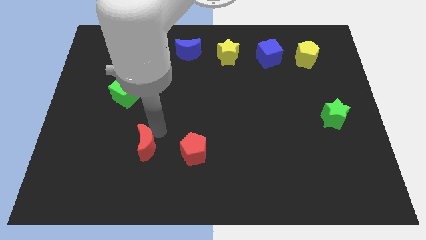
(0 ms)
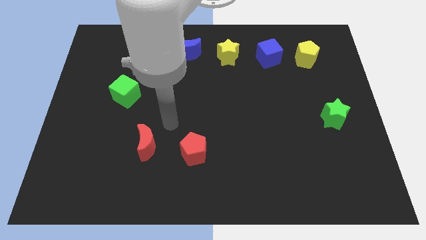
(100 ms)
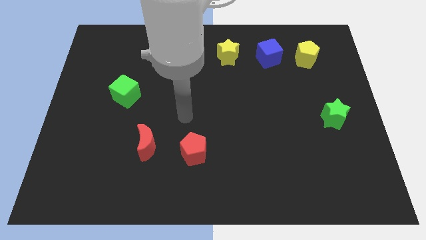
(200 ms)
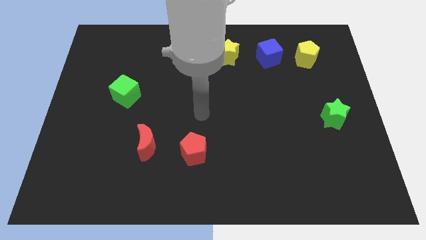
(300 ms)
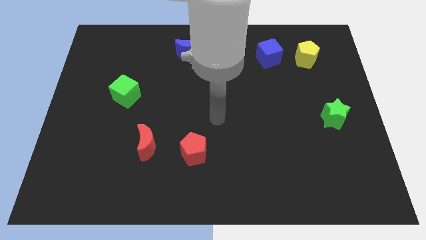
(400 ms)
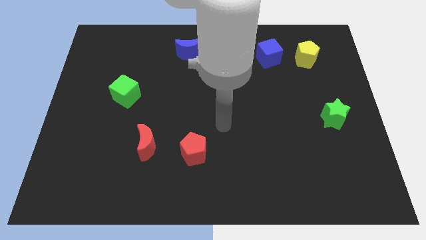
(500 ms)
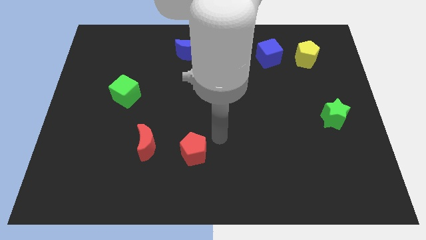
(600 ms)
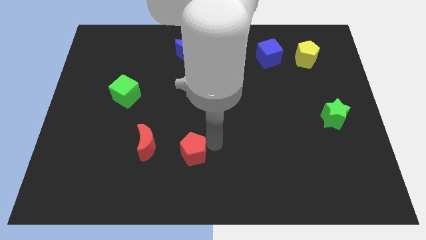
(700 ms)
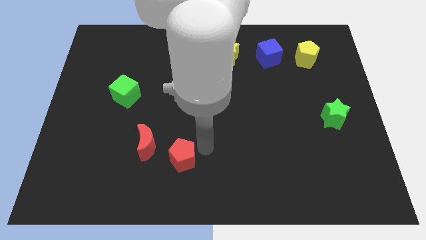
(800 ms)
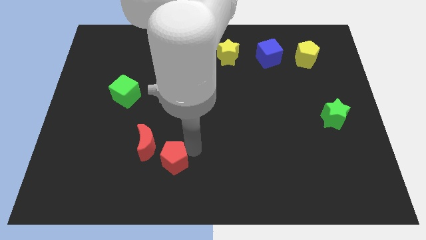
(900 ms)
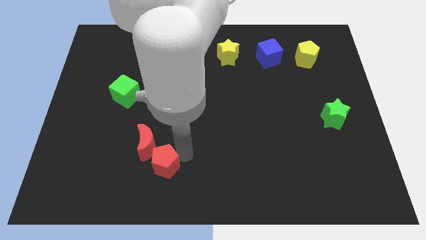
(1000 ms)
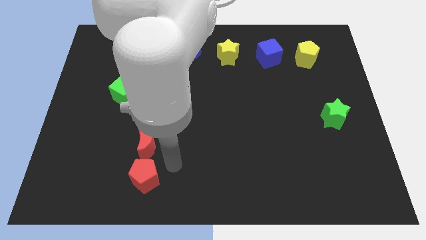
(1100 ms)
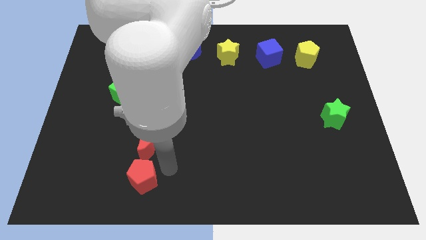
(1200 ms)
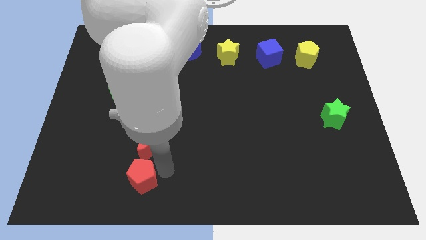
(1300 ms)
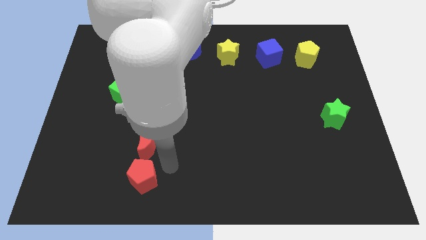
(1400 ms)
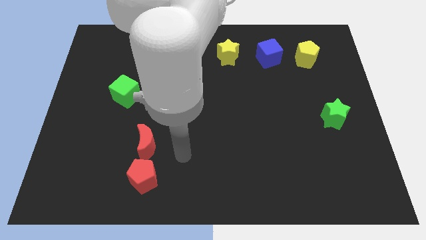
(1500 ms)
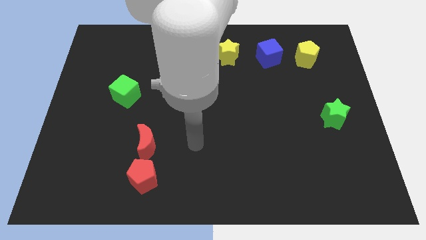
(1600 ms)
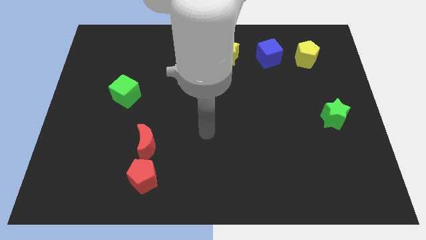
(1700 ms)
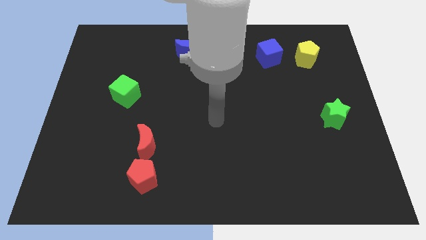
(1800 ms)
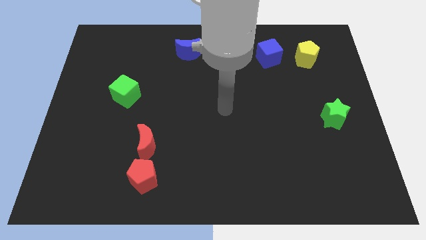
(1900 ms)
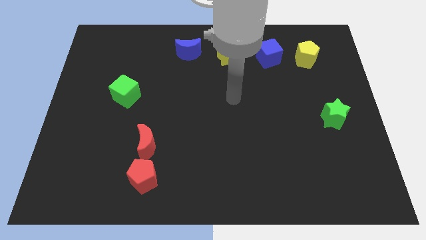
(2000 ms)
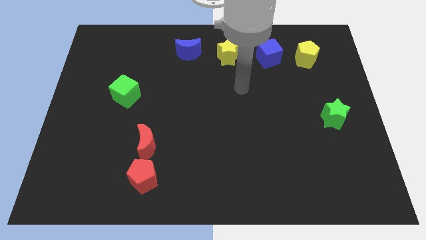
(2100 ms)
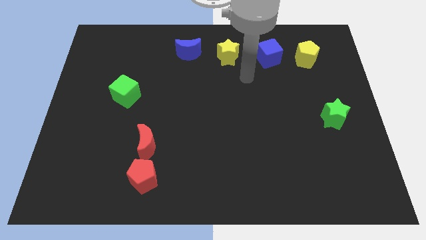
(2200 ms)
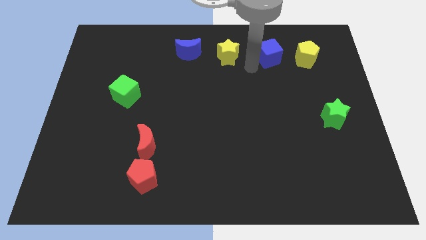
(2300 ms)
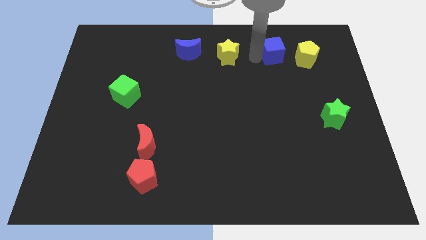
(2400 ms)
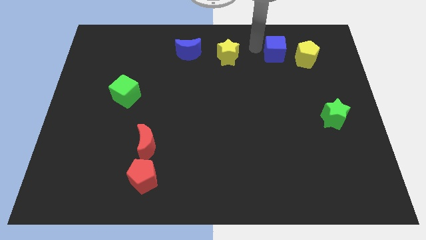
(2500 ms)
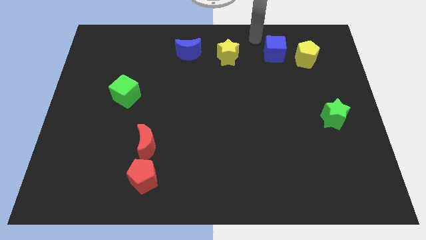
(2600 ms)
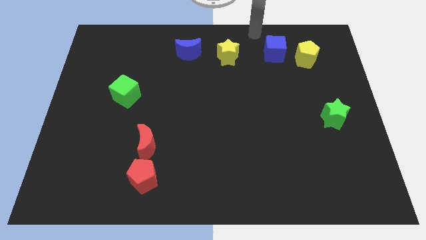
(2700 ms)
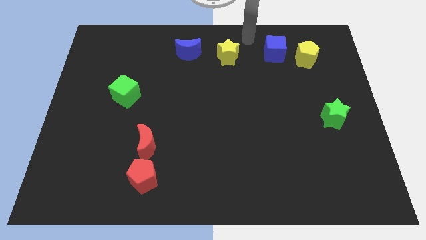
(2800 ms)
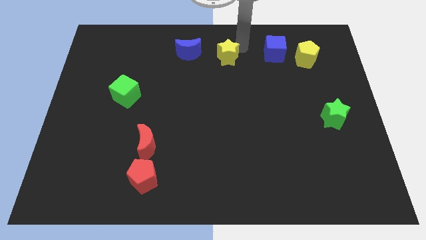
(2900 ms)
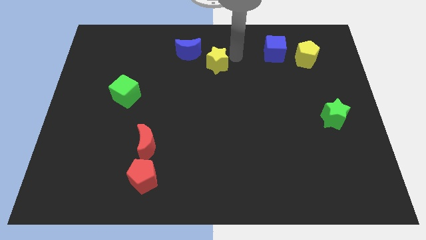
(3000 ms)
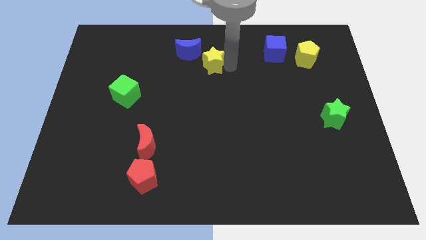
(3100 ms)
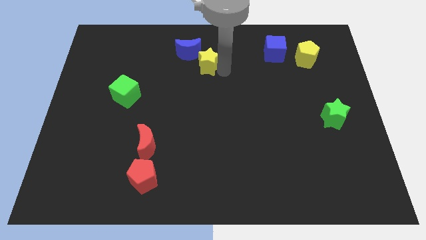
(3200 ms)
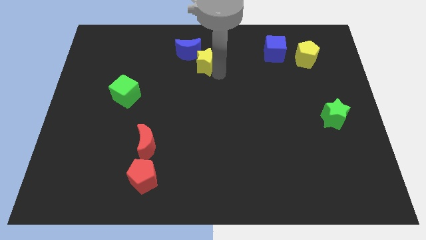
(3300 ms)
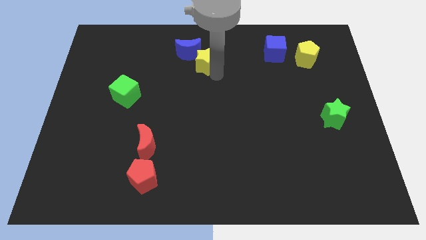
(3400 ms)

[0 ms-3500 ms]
move the red pentagon below the red crescent

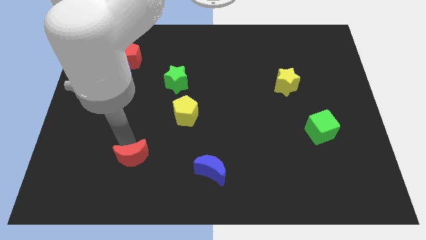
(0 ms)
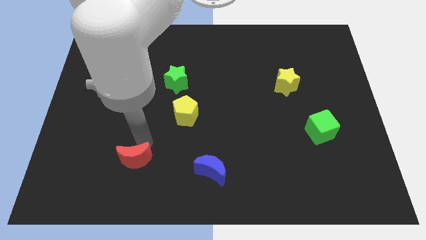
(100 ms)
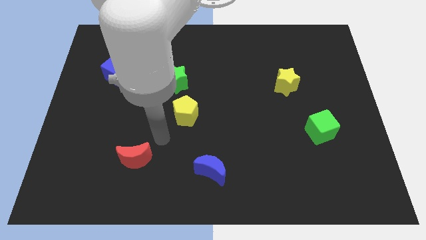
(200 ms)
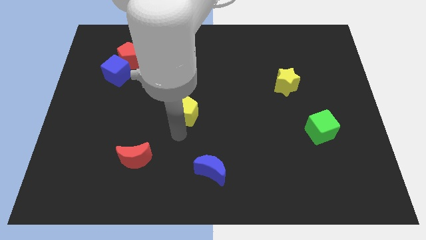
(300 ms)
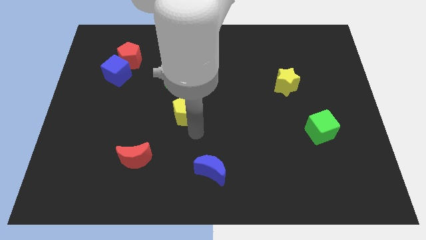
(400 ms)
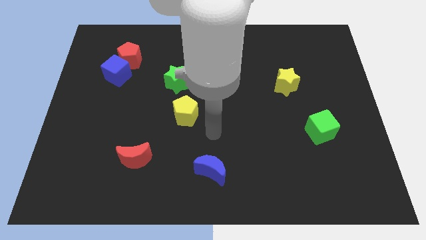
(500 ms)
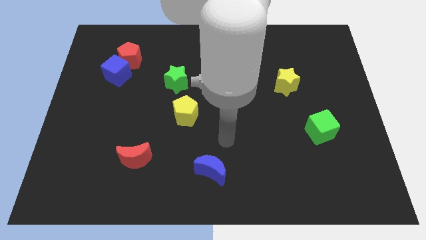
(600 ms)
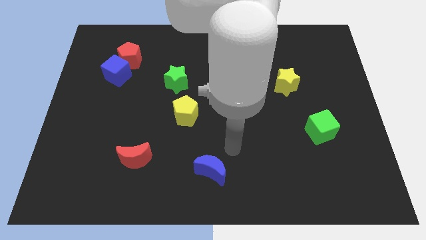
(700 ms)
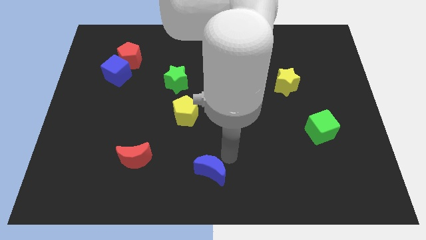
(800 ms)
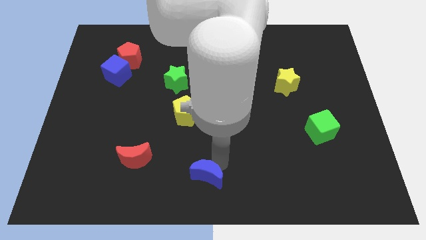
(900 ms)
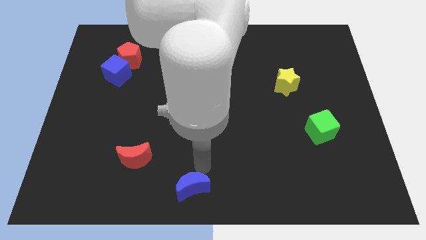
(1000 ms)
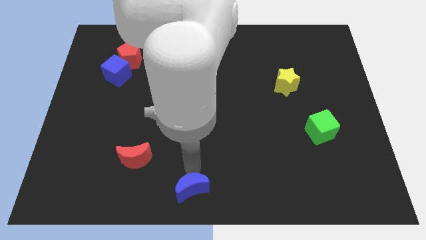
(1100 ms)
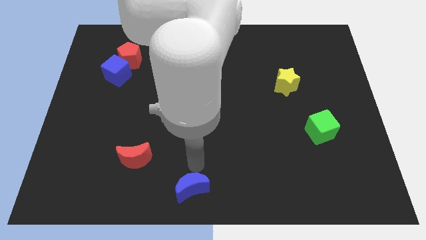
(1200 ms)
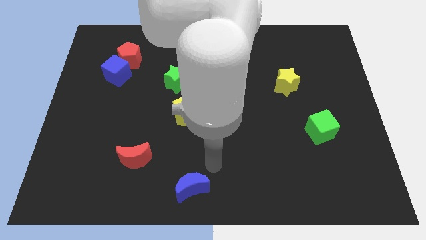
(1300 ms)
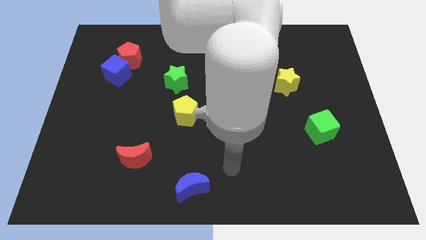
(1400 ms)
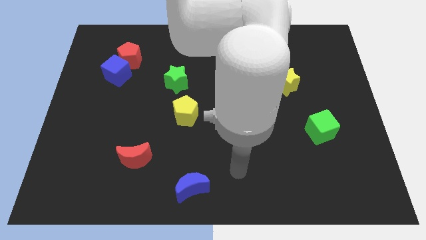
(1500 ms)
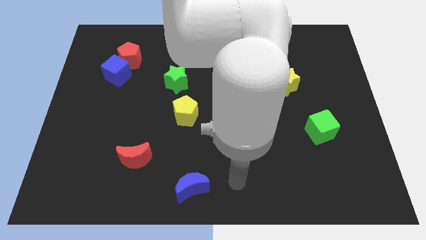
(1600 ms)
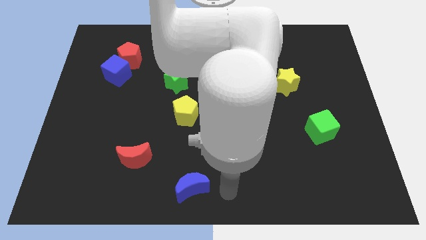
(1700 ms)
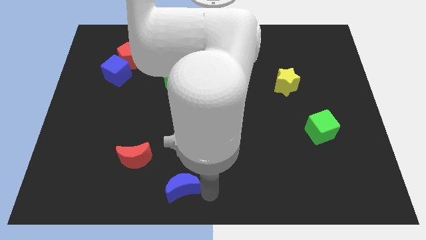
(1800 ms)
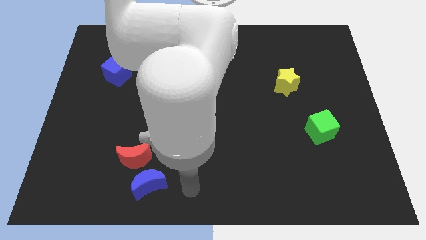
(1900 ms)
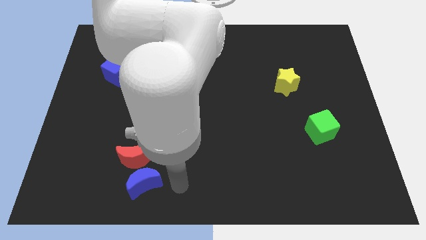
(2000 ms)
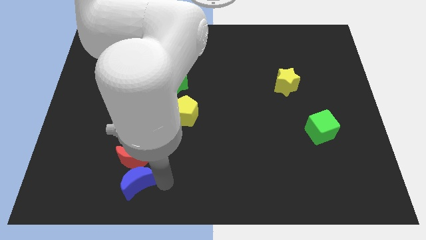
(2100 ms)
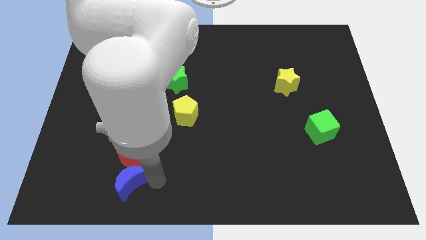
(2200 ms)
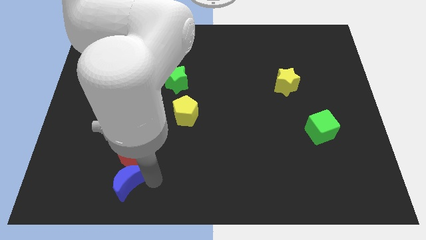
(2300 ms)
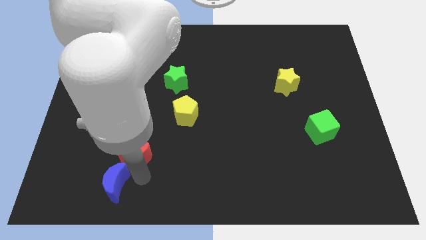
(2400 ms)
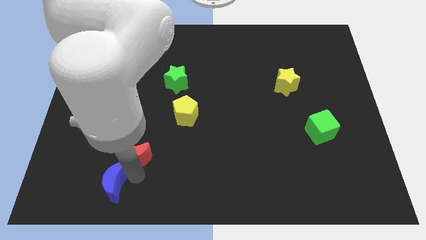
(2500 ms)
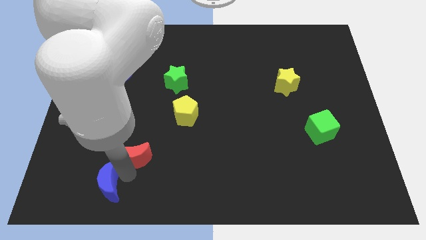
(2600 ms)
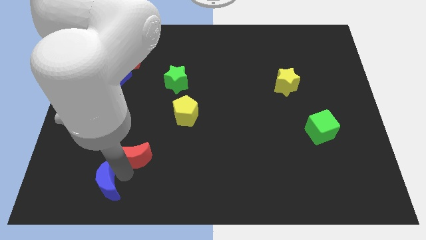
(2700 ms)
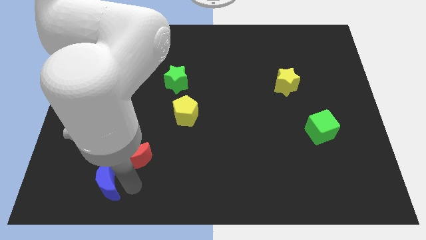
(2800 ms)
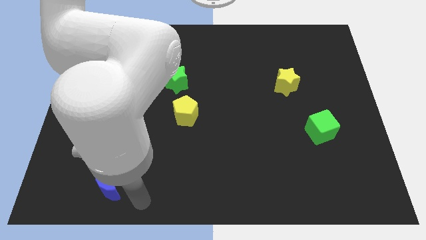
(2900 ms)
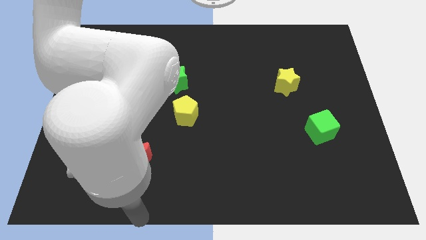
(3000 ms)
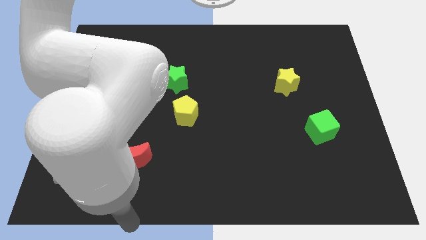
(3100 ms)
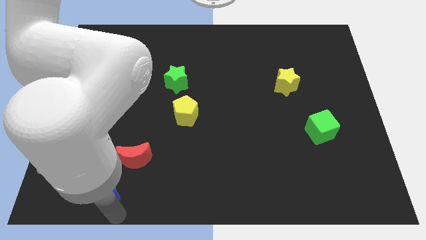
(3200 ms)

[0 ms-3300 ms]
place blue moon to the bottom left of the red moon

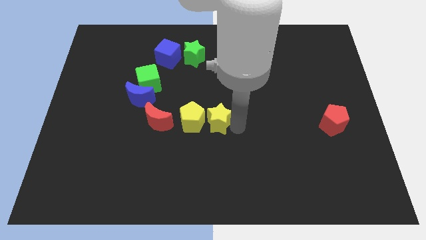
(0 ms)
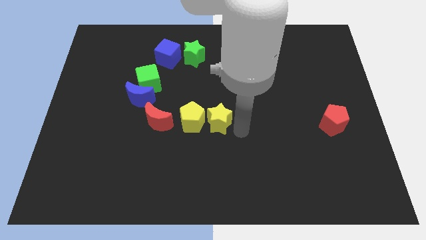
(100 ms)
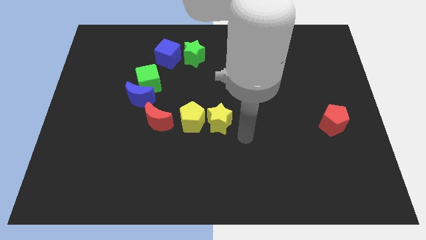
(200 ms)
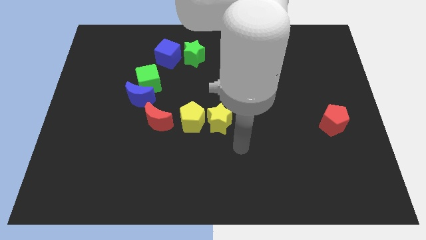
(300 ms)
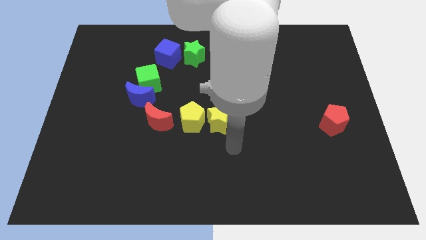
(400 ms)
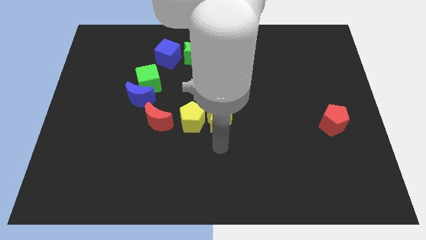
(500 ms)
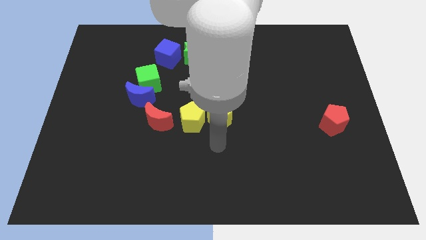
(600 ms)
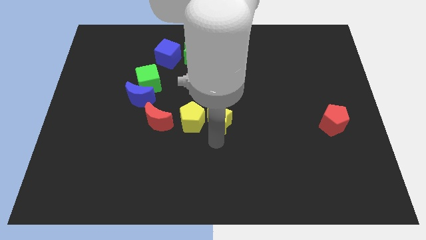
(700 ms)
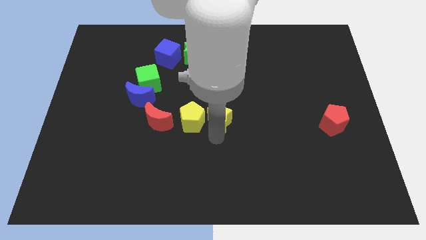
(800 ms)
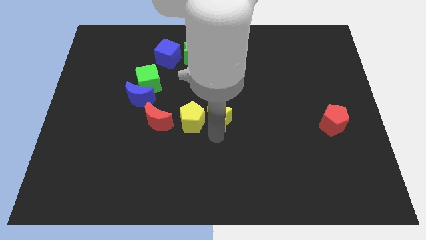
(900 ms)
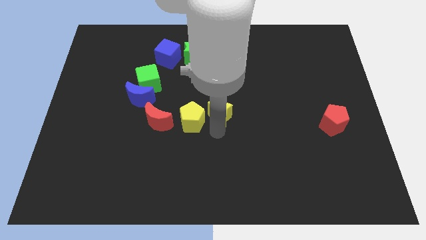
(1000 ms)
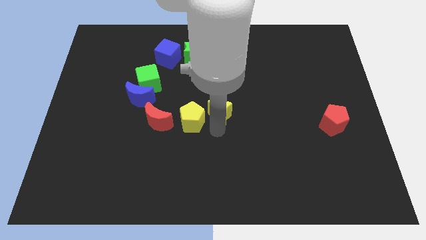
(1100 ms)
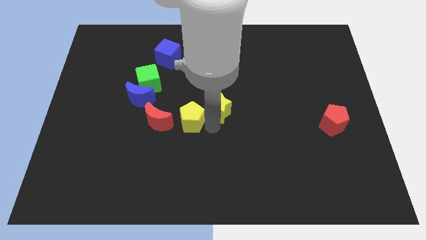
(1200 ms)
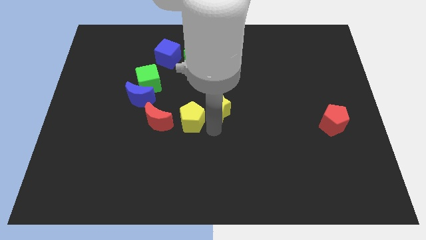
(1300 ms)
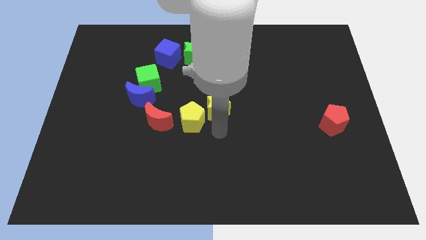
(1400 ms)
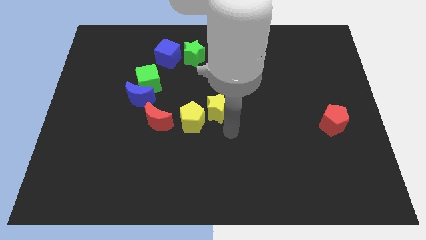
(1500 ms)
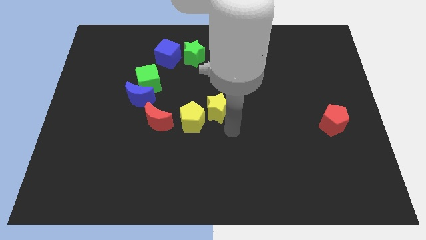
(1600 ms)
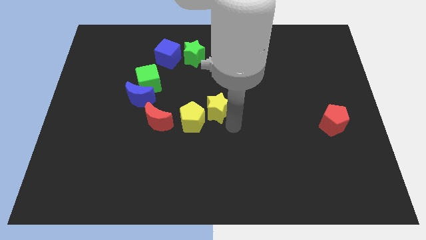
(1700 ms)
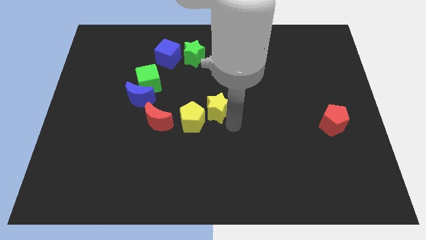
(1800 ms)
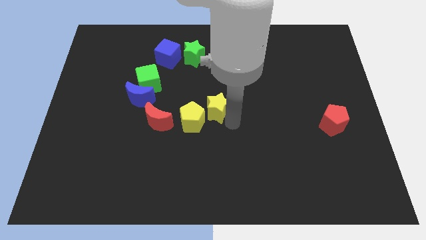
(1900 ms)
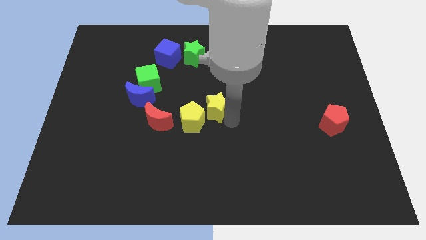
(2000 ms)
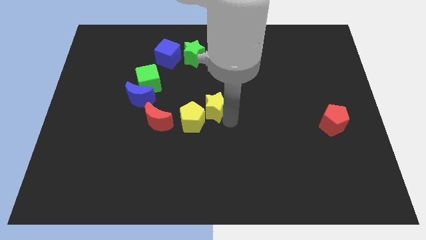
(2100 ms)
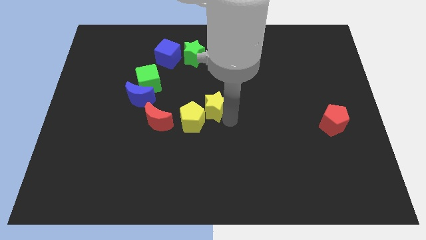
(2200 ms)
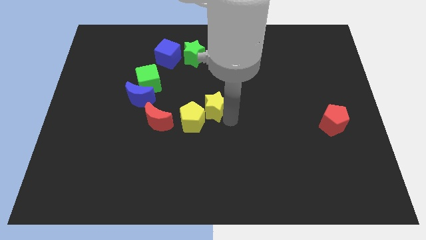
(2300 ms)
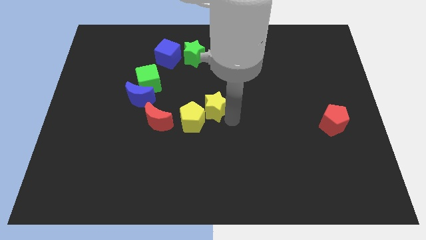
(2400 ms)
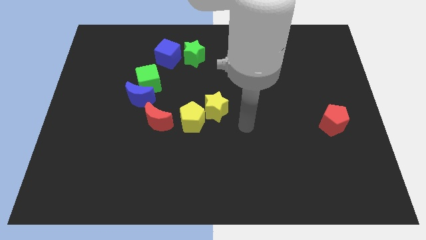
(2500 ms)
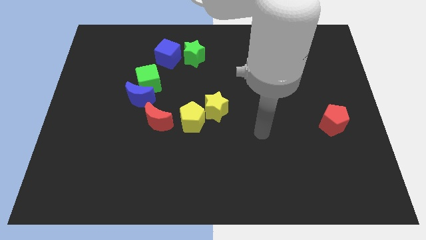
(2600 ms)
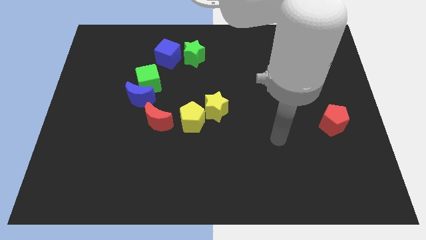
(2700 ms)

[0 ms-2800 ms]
push the yellow star to the top right of the yellow pentagon
